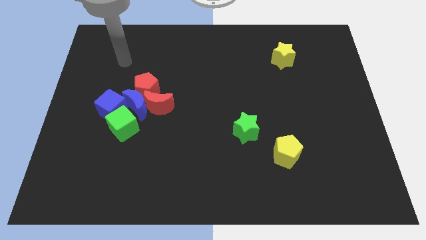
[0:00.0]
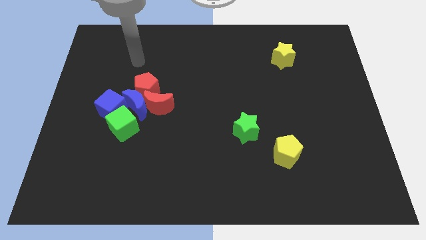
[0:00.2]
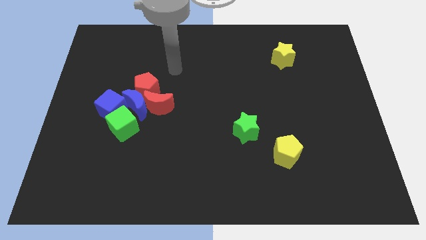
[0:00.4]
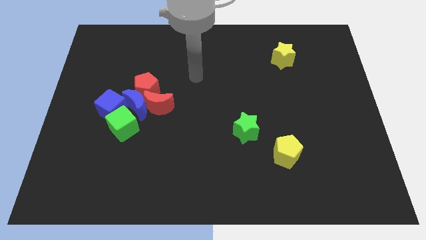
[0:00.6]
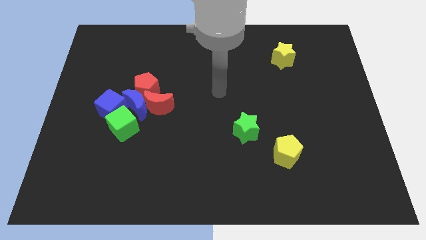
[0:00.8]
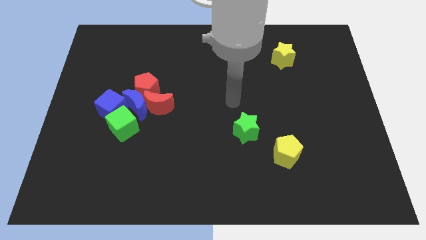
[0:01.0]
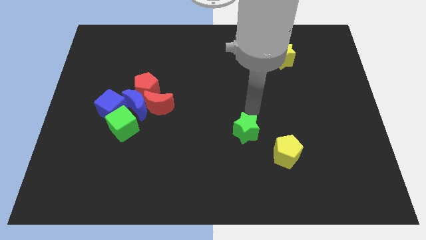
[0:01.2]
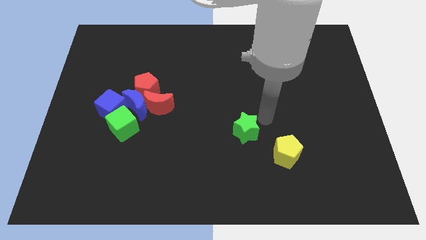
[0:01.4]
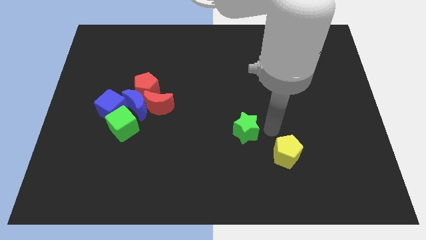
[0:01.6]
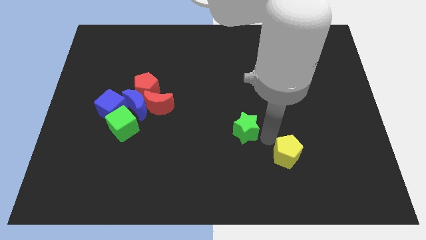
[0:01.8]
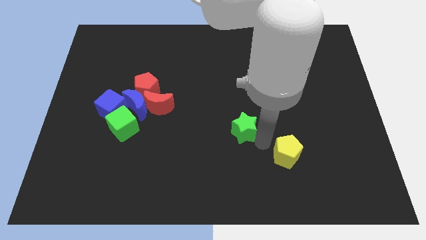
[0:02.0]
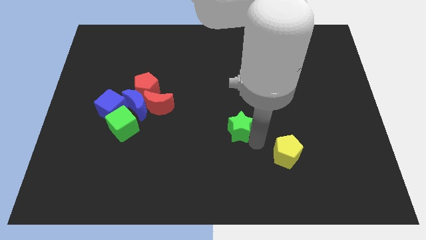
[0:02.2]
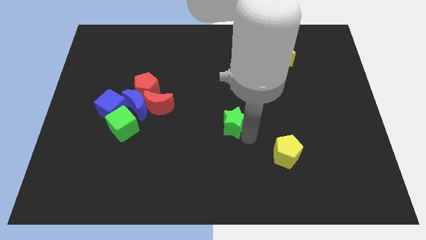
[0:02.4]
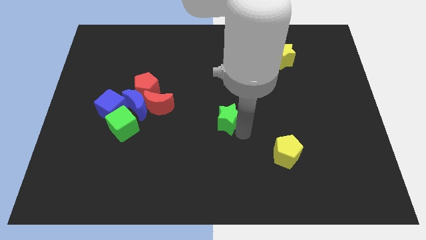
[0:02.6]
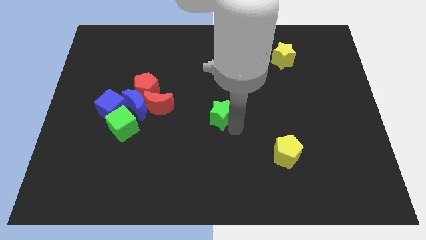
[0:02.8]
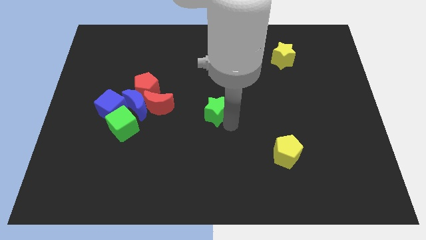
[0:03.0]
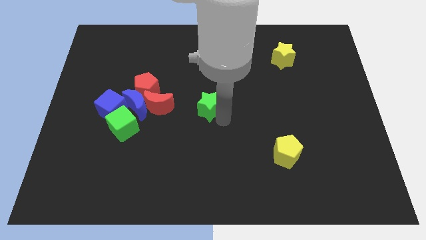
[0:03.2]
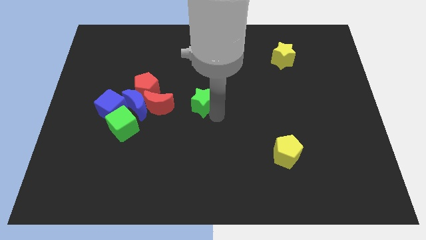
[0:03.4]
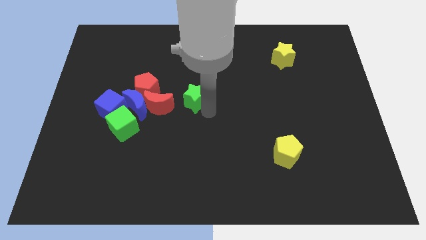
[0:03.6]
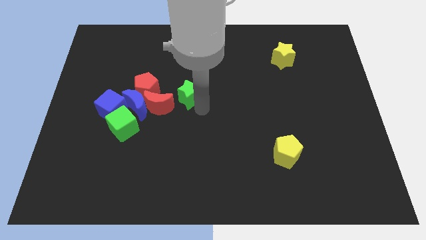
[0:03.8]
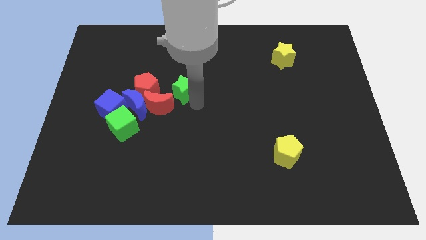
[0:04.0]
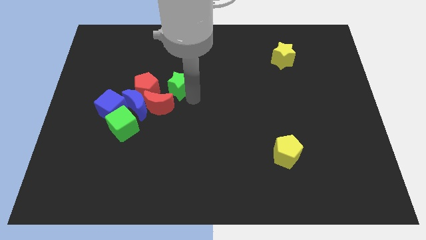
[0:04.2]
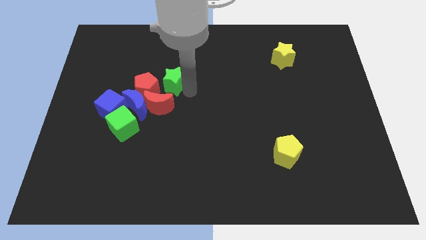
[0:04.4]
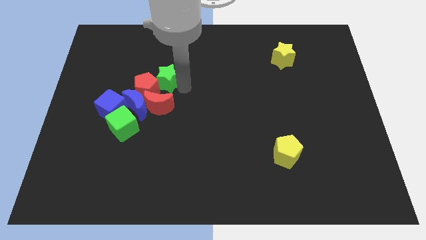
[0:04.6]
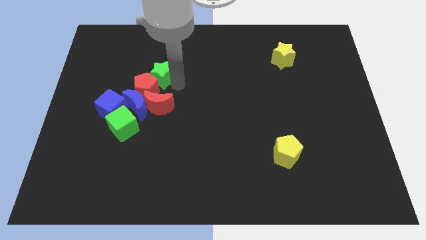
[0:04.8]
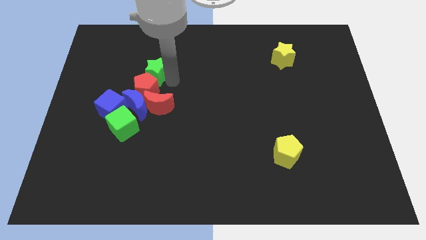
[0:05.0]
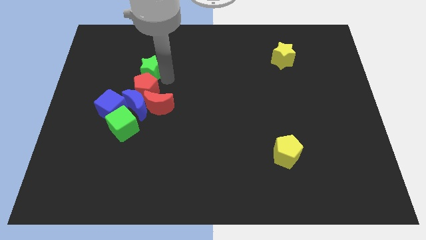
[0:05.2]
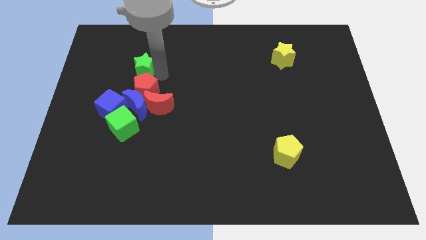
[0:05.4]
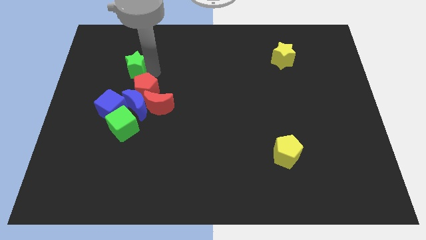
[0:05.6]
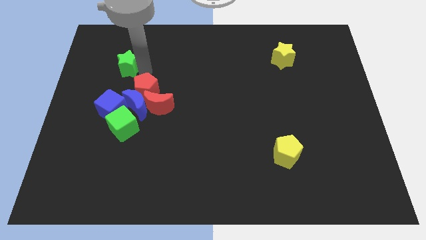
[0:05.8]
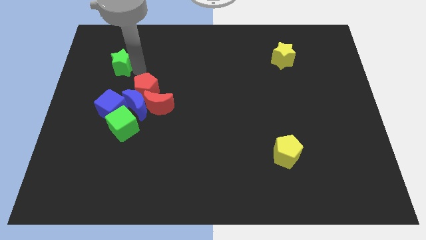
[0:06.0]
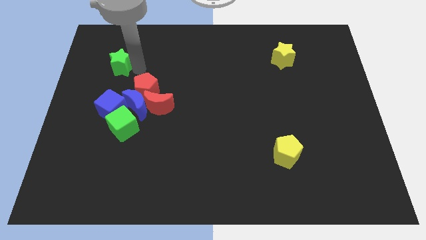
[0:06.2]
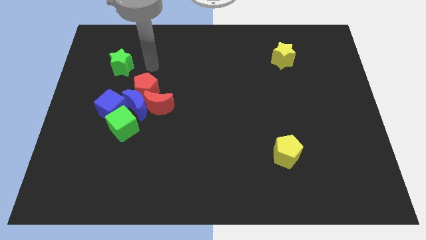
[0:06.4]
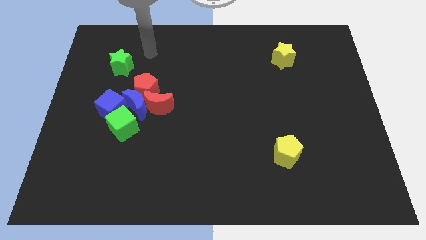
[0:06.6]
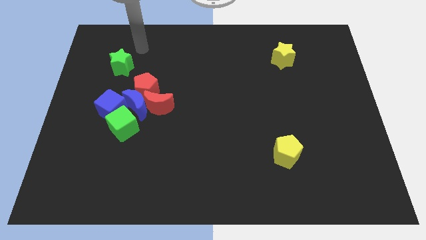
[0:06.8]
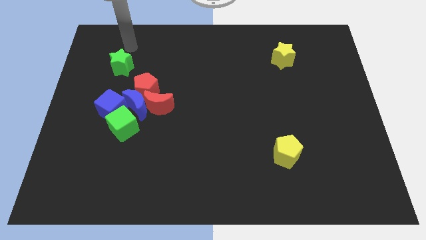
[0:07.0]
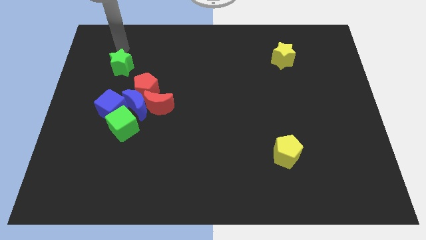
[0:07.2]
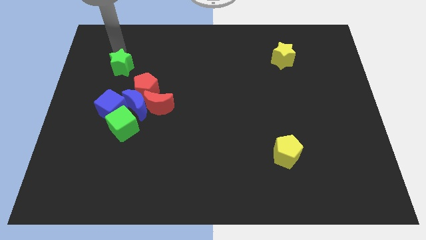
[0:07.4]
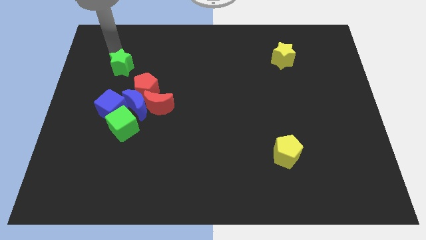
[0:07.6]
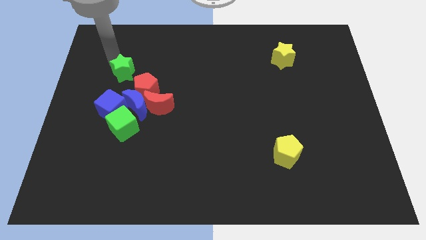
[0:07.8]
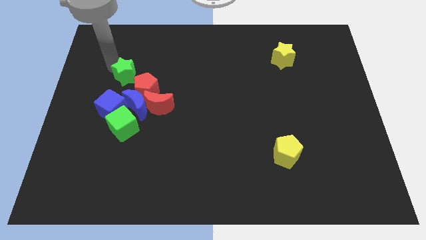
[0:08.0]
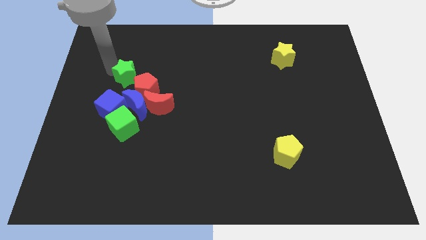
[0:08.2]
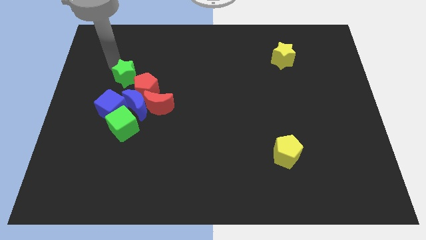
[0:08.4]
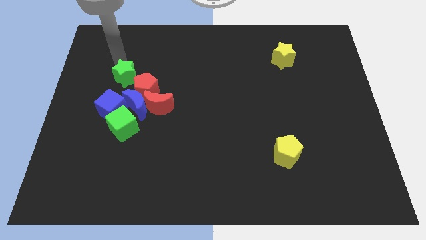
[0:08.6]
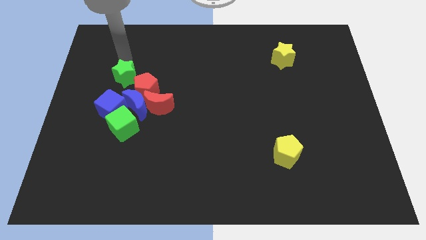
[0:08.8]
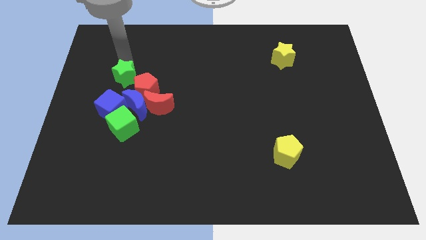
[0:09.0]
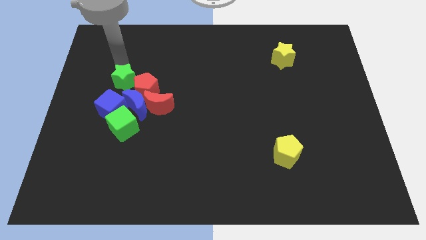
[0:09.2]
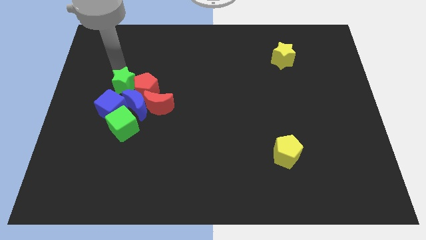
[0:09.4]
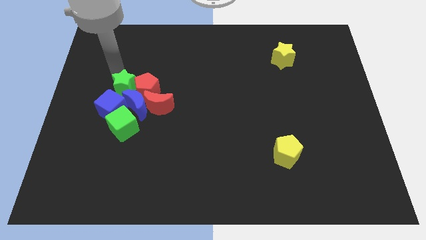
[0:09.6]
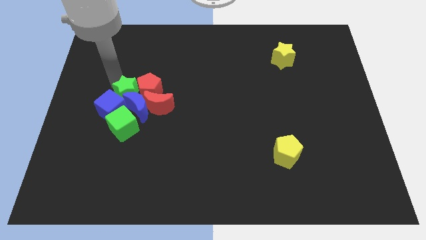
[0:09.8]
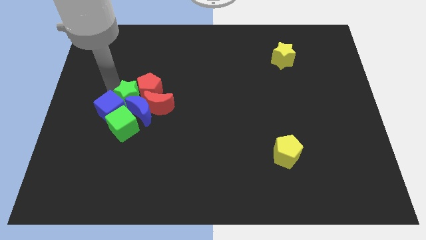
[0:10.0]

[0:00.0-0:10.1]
slide the green star close to the blue cube

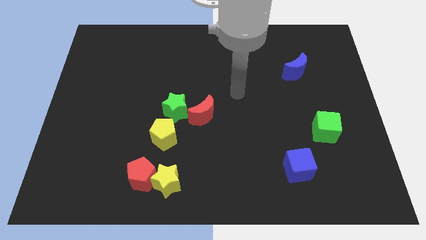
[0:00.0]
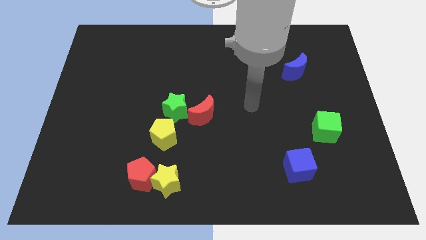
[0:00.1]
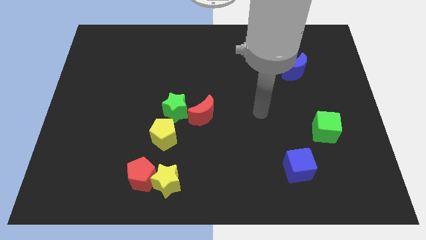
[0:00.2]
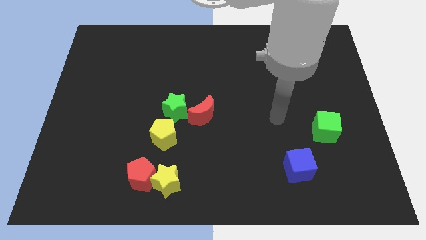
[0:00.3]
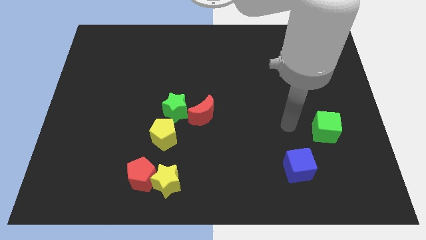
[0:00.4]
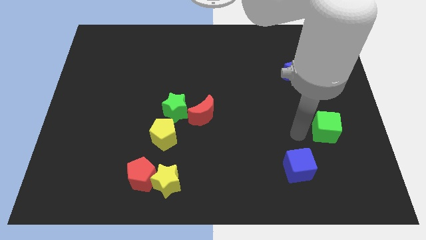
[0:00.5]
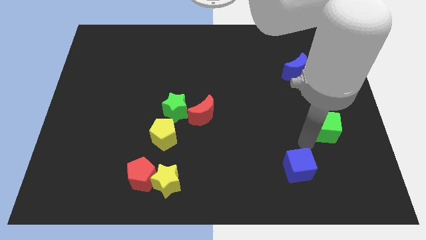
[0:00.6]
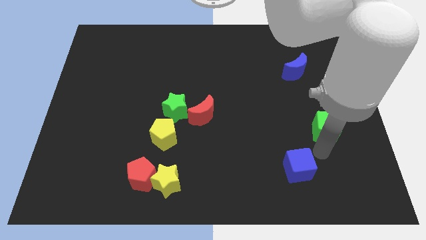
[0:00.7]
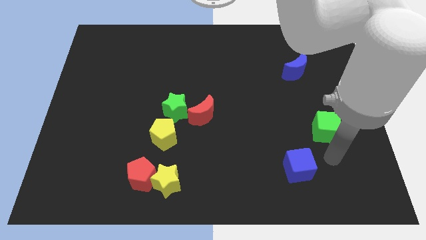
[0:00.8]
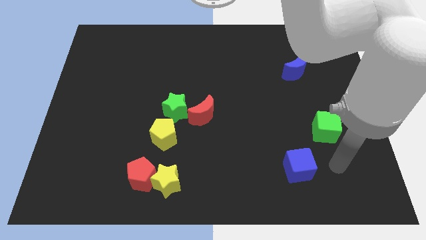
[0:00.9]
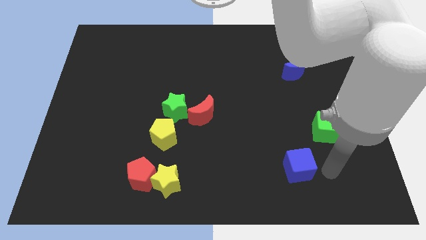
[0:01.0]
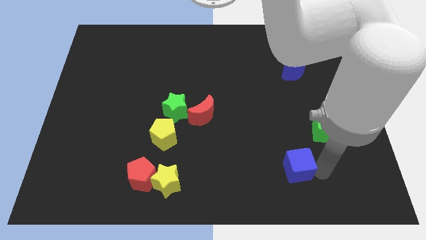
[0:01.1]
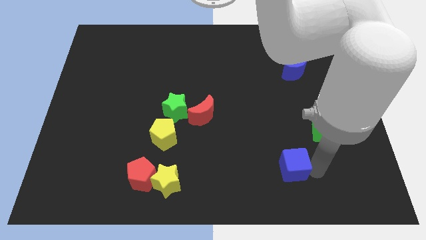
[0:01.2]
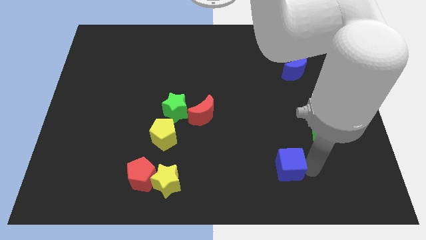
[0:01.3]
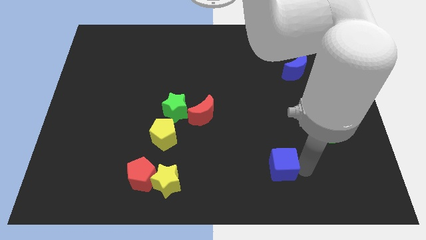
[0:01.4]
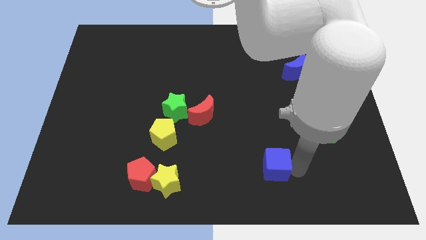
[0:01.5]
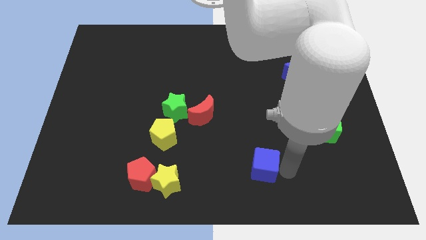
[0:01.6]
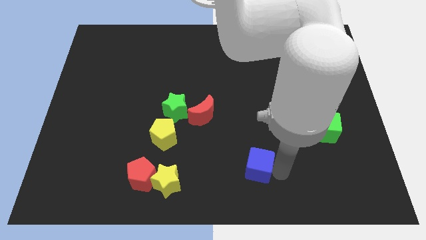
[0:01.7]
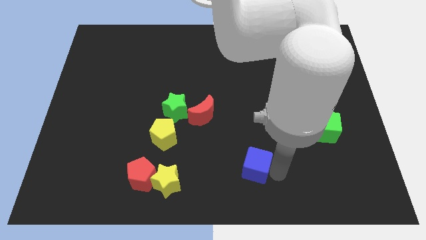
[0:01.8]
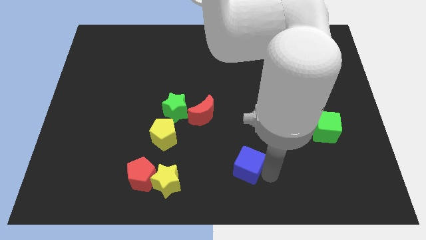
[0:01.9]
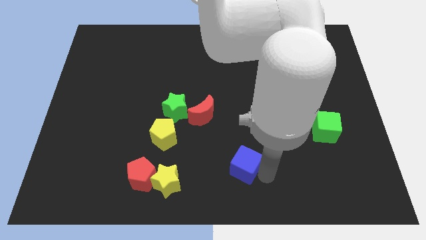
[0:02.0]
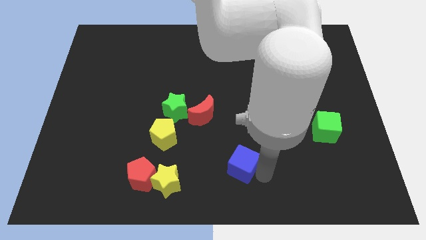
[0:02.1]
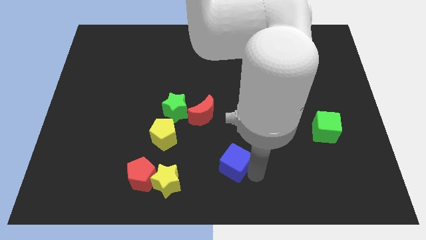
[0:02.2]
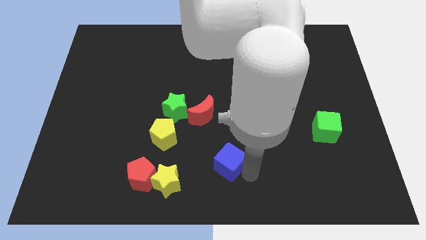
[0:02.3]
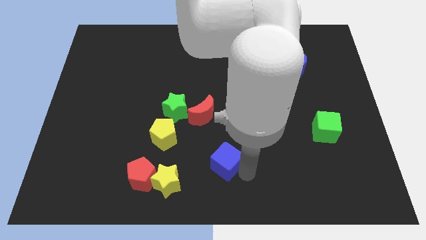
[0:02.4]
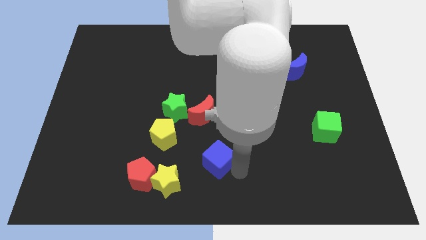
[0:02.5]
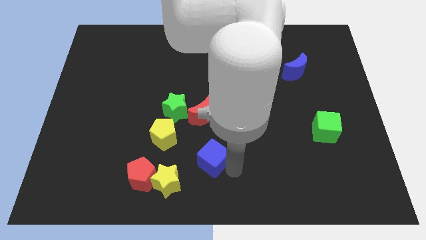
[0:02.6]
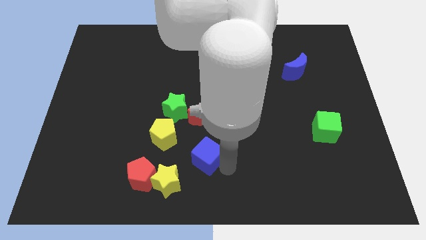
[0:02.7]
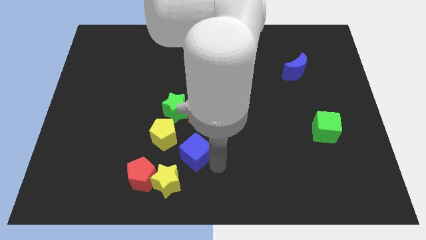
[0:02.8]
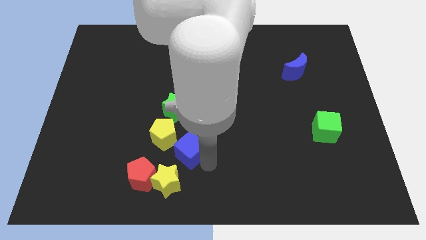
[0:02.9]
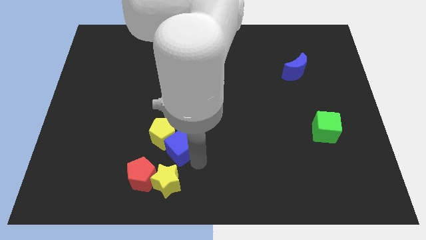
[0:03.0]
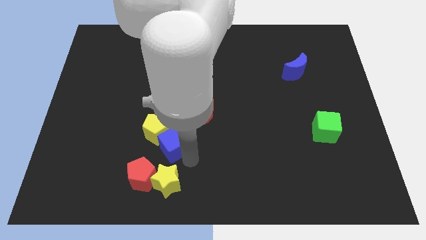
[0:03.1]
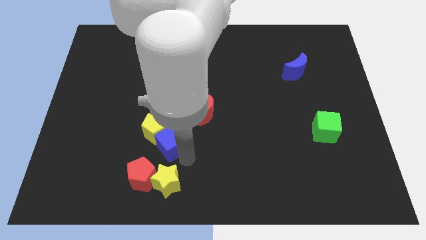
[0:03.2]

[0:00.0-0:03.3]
push the blue cube next to the yellow pentagon
